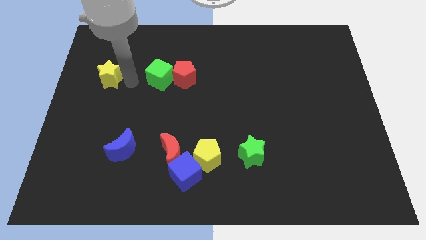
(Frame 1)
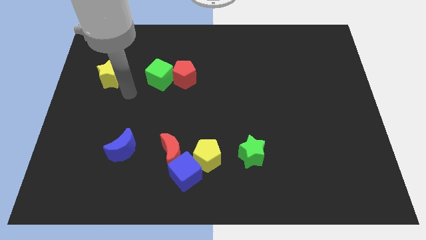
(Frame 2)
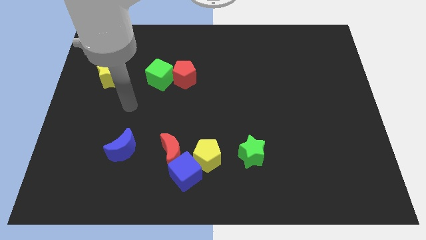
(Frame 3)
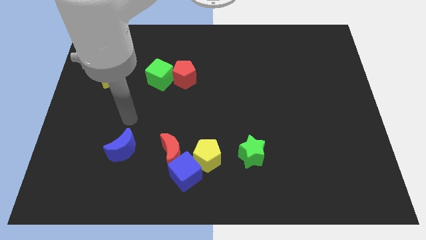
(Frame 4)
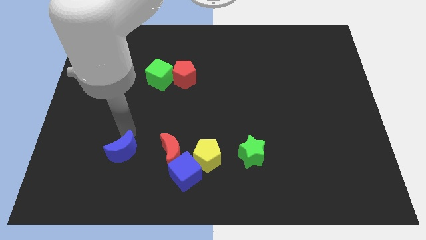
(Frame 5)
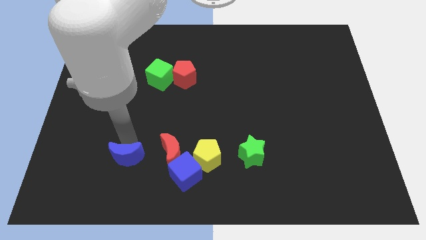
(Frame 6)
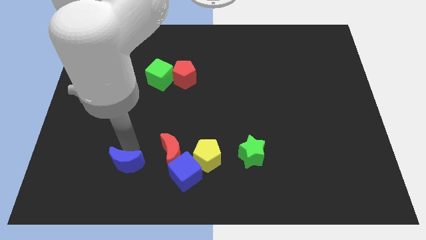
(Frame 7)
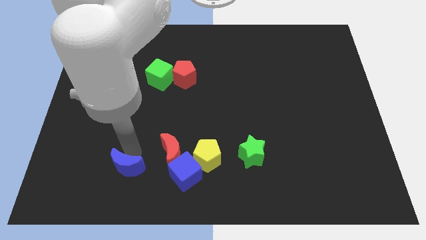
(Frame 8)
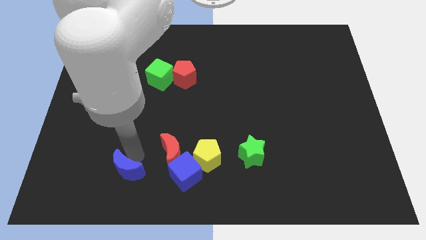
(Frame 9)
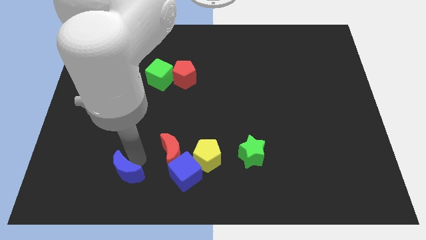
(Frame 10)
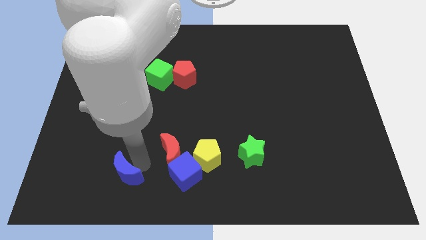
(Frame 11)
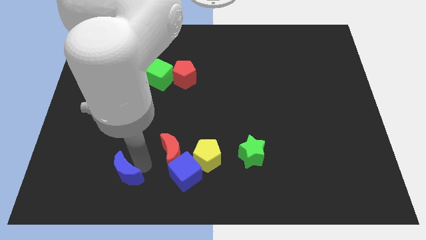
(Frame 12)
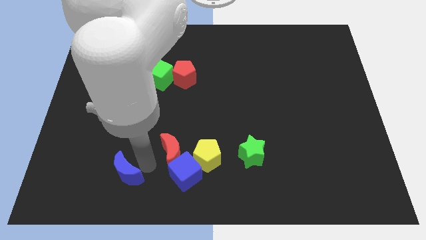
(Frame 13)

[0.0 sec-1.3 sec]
push blue moon slightly downwards

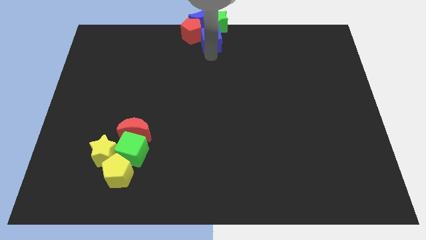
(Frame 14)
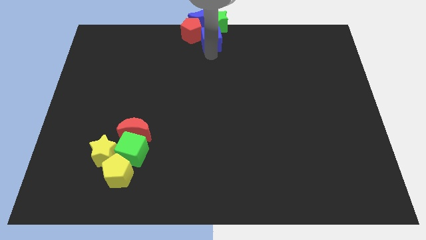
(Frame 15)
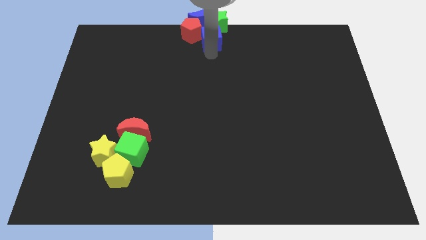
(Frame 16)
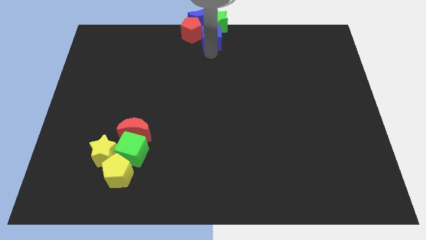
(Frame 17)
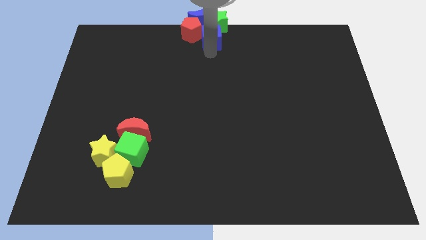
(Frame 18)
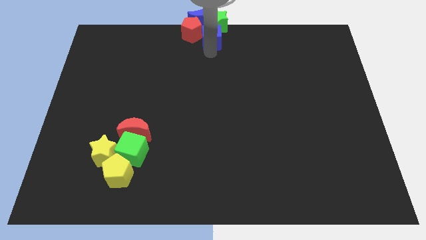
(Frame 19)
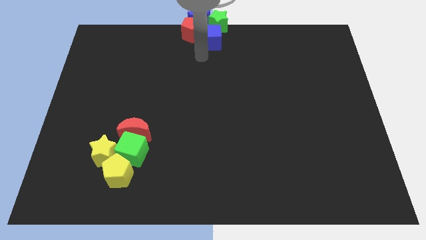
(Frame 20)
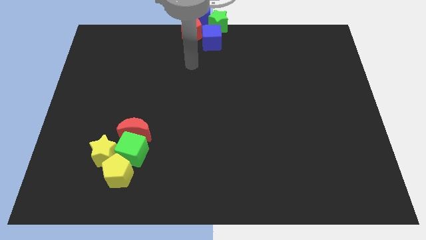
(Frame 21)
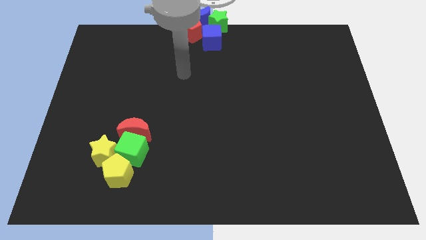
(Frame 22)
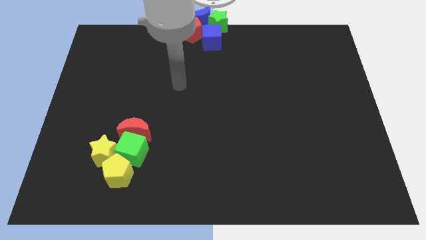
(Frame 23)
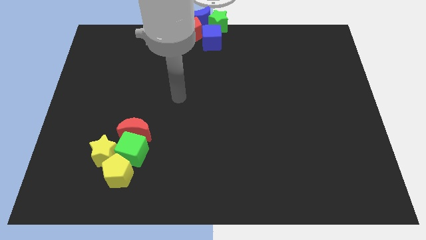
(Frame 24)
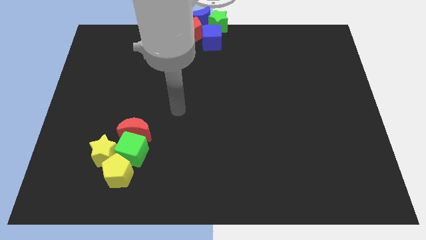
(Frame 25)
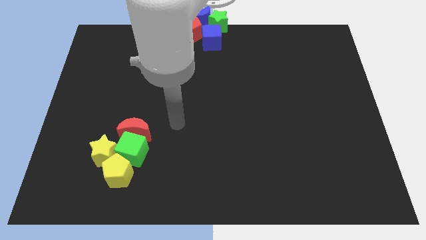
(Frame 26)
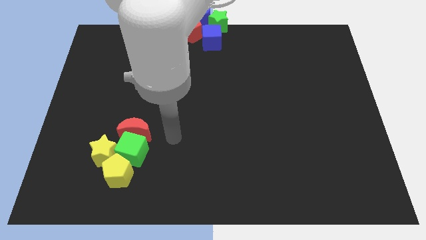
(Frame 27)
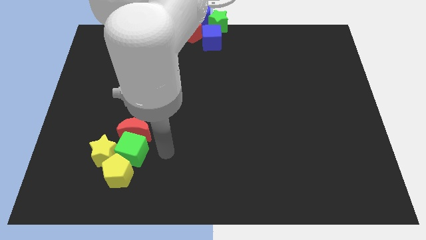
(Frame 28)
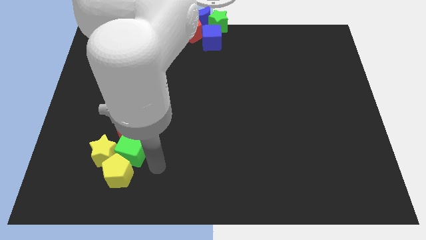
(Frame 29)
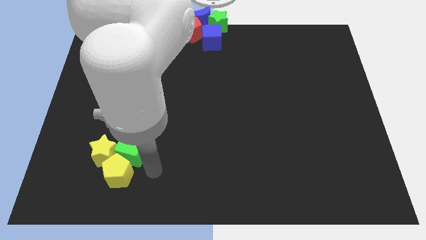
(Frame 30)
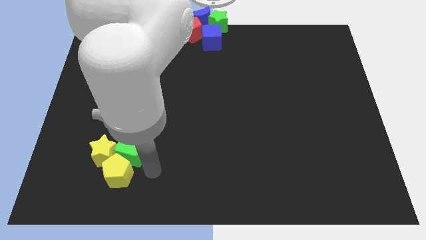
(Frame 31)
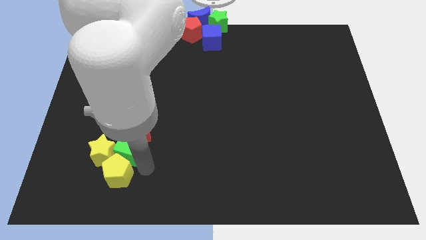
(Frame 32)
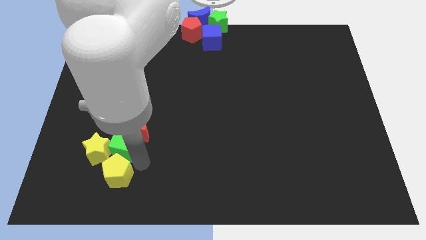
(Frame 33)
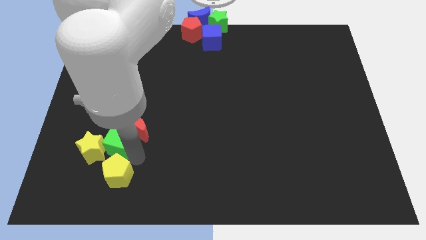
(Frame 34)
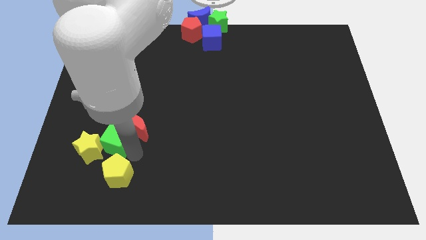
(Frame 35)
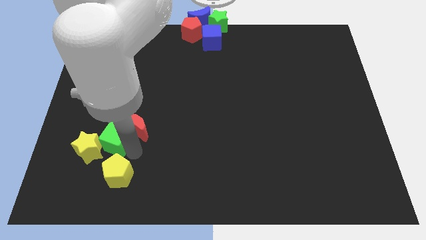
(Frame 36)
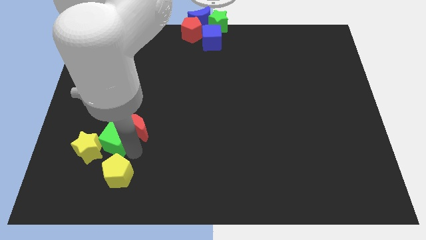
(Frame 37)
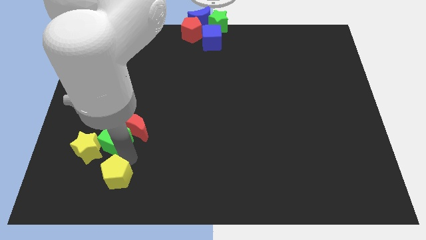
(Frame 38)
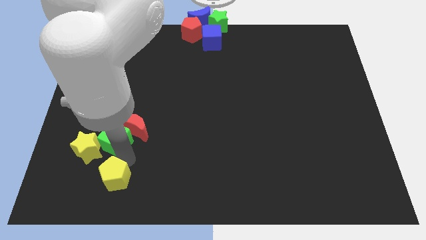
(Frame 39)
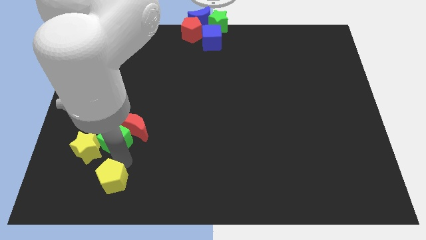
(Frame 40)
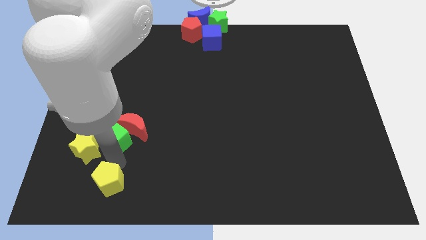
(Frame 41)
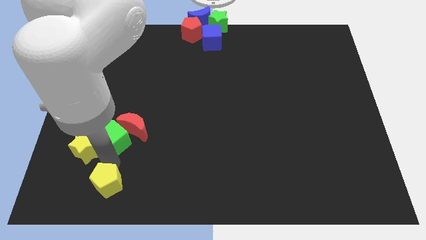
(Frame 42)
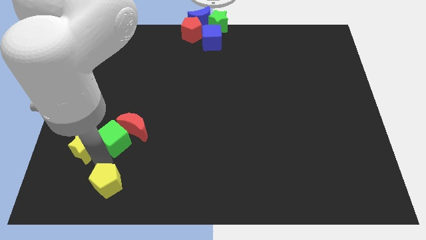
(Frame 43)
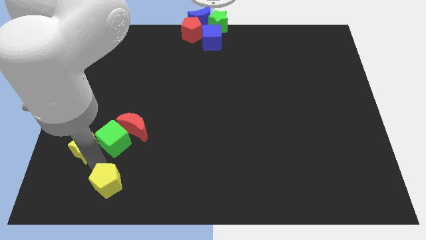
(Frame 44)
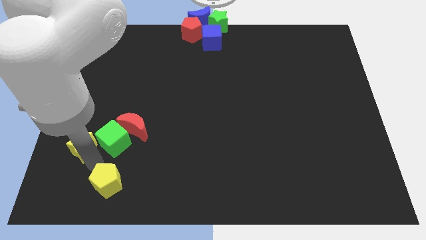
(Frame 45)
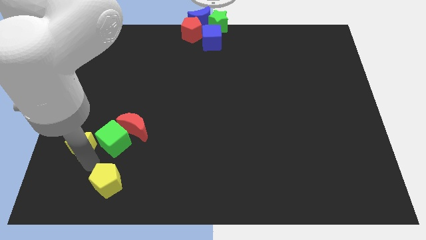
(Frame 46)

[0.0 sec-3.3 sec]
move the arm away from the blue cube

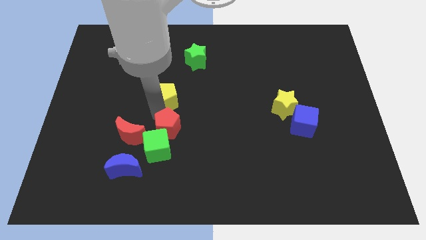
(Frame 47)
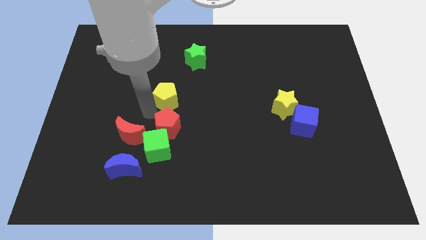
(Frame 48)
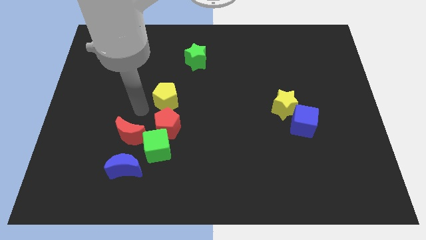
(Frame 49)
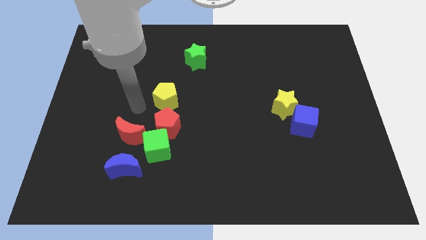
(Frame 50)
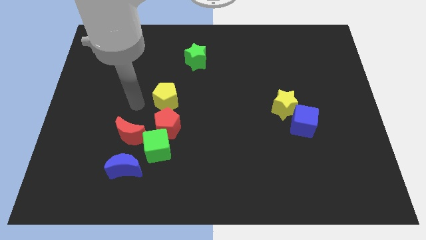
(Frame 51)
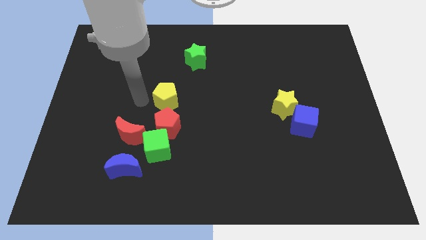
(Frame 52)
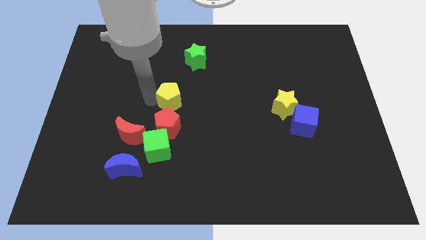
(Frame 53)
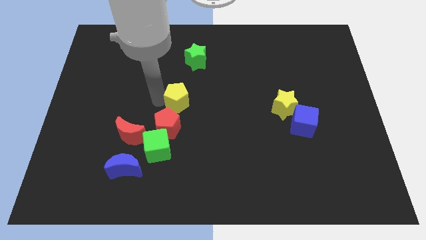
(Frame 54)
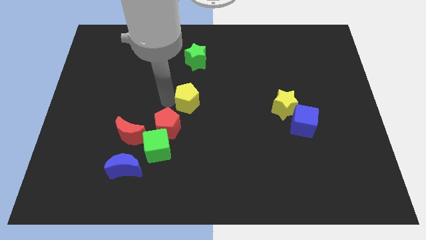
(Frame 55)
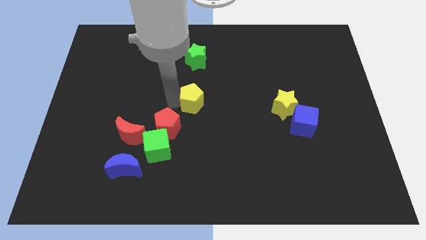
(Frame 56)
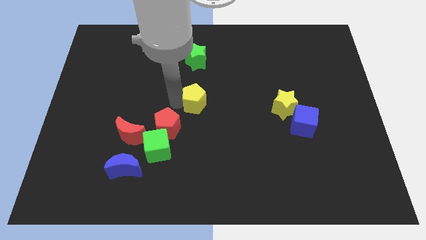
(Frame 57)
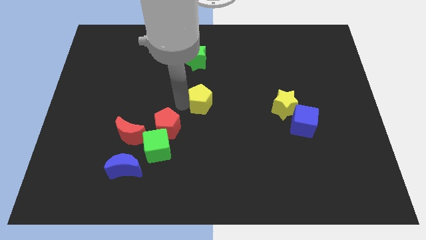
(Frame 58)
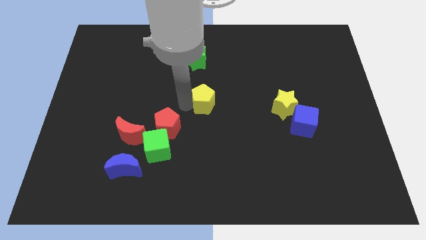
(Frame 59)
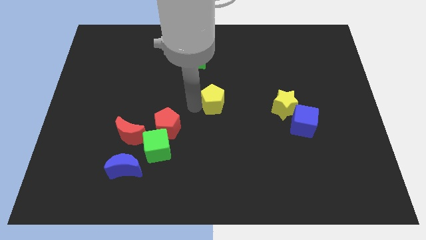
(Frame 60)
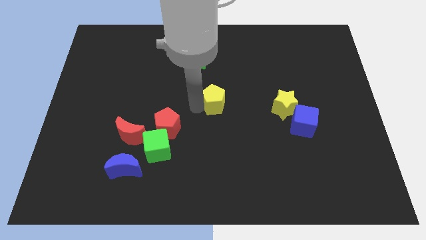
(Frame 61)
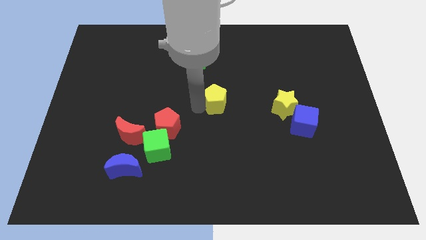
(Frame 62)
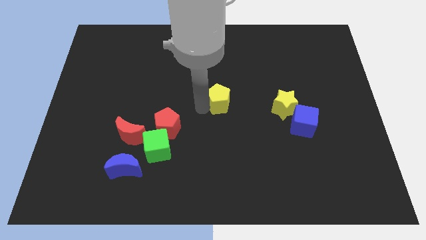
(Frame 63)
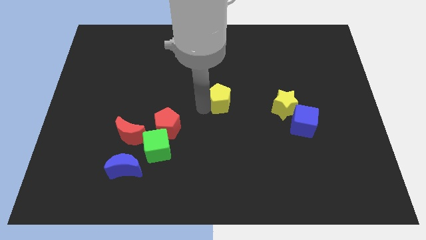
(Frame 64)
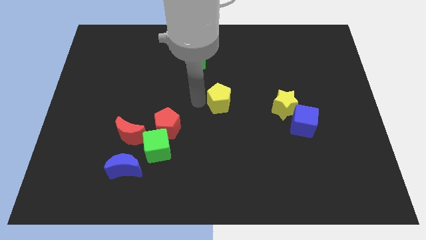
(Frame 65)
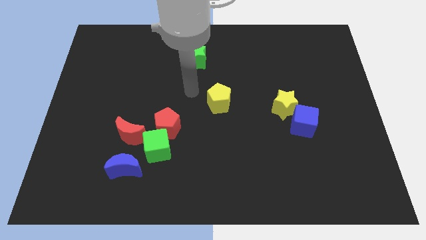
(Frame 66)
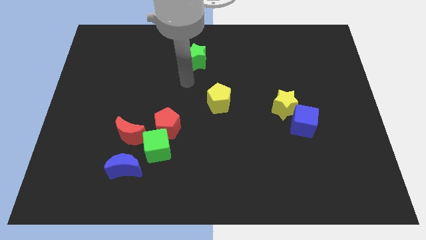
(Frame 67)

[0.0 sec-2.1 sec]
place the yellow pentagon at the center of the board

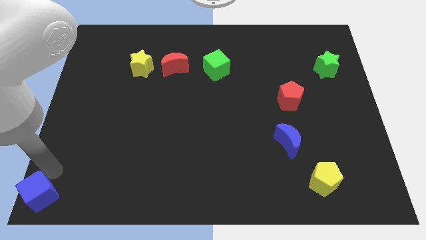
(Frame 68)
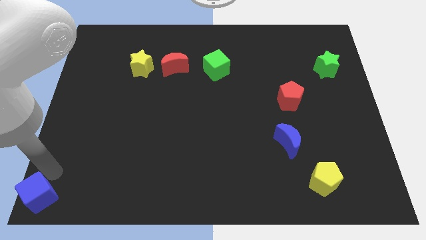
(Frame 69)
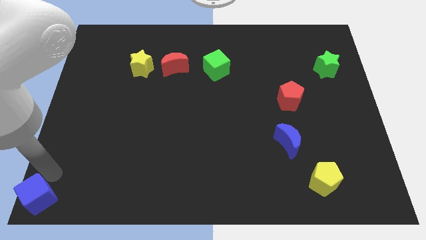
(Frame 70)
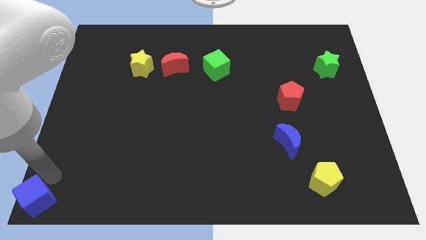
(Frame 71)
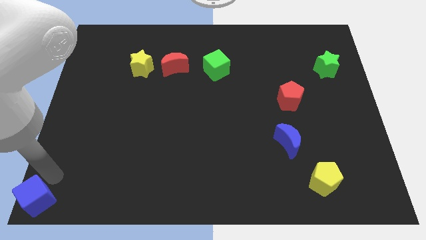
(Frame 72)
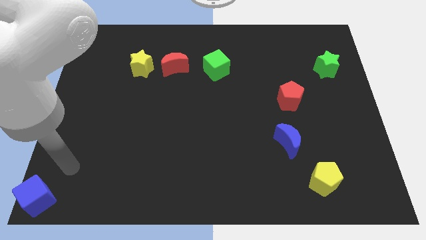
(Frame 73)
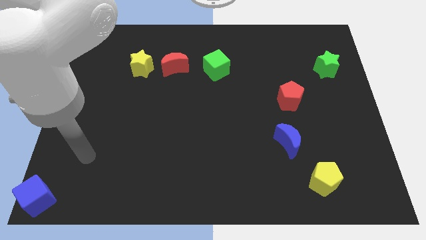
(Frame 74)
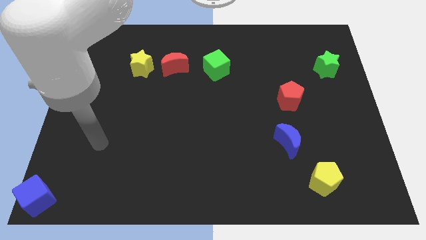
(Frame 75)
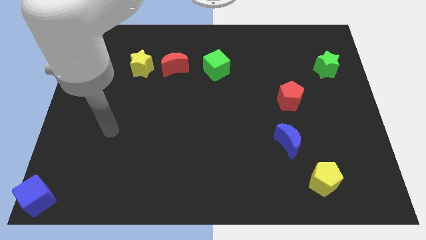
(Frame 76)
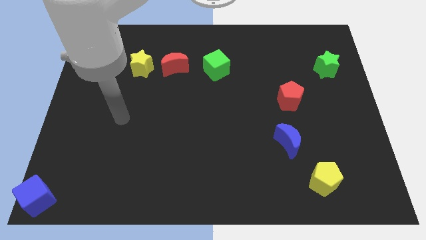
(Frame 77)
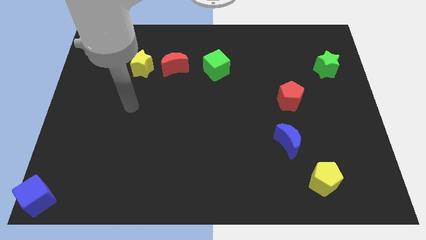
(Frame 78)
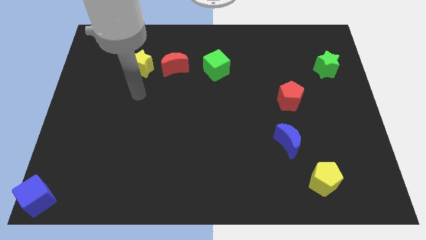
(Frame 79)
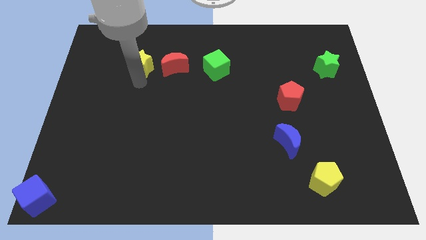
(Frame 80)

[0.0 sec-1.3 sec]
move your arm from the blue cube to yellow star

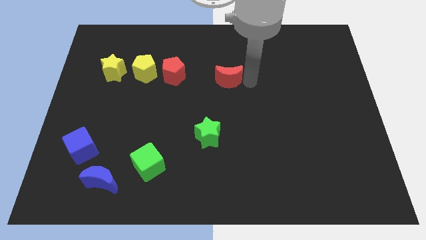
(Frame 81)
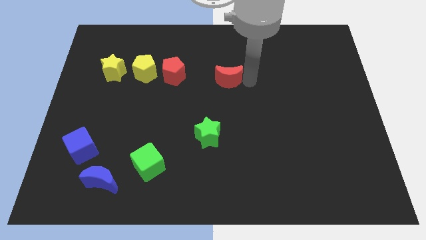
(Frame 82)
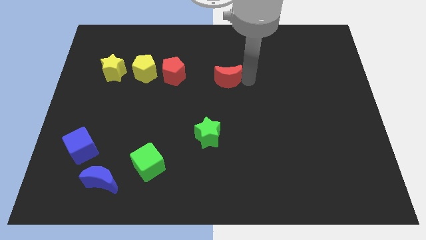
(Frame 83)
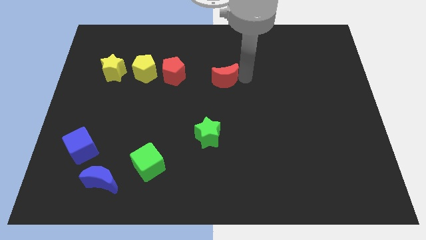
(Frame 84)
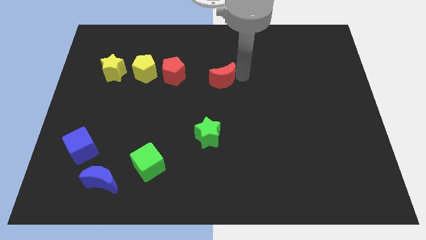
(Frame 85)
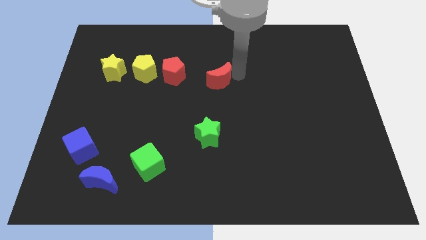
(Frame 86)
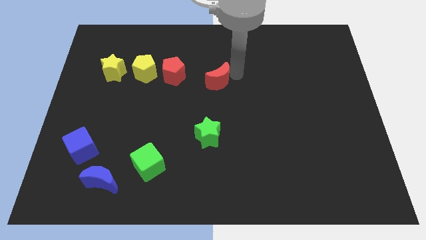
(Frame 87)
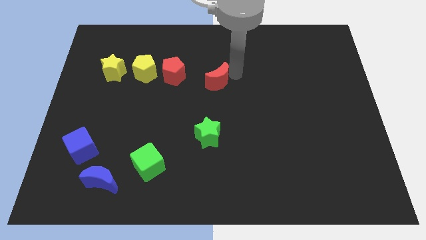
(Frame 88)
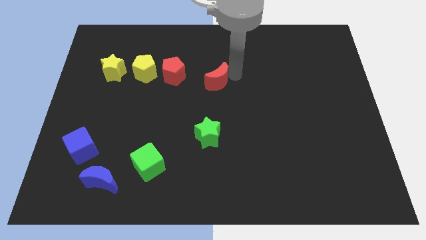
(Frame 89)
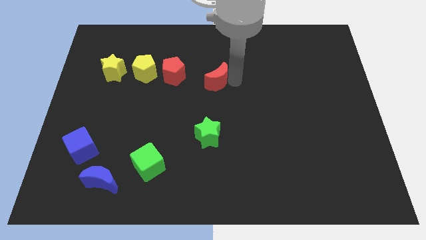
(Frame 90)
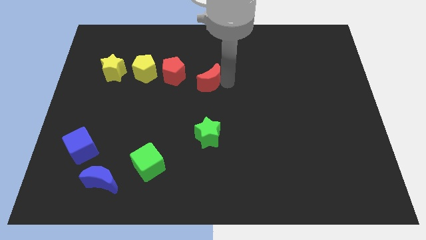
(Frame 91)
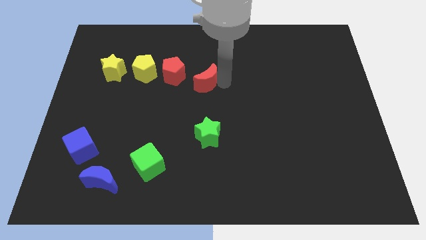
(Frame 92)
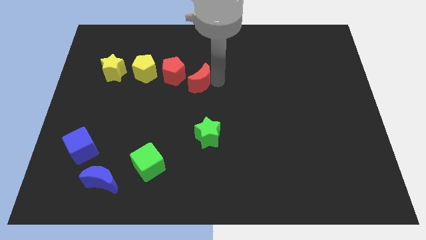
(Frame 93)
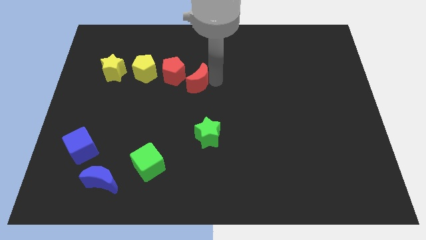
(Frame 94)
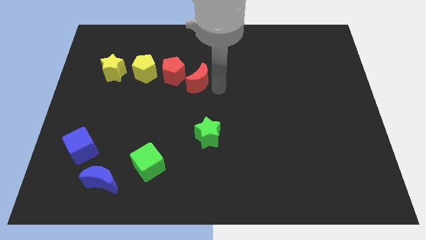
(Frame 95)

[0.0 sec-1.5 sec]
place the red moon next to the red pentagon
